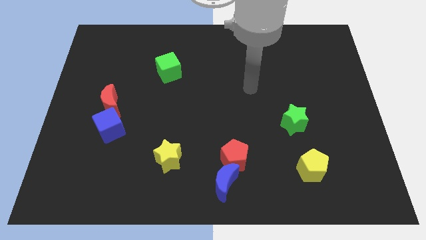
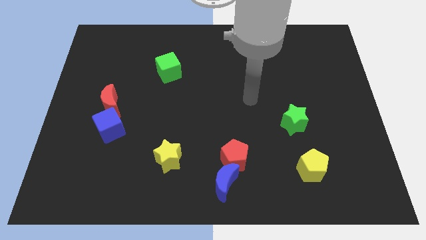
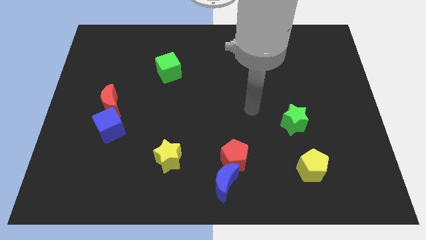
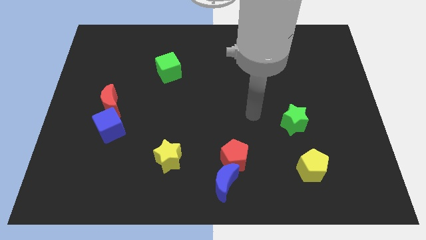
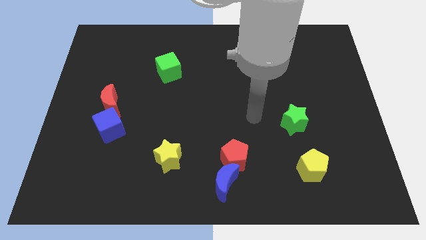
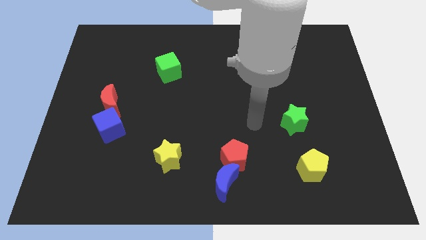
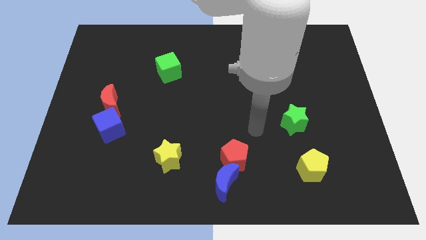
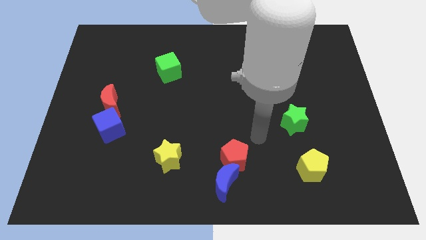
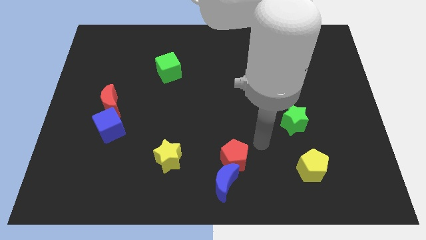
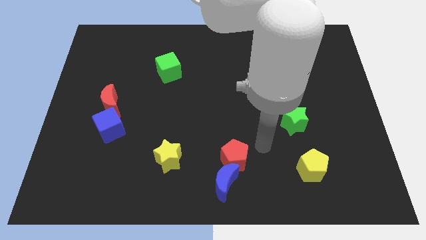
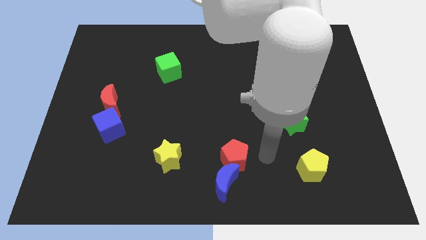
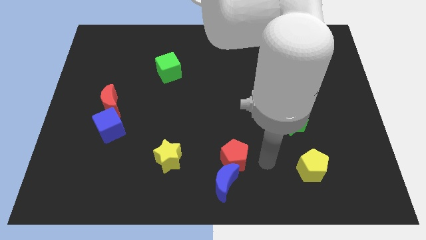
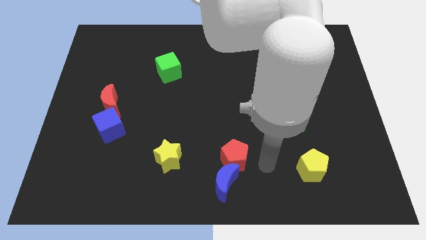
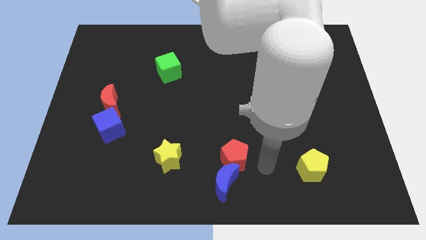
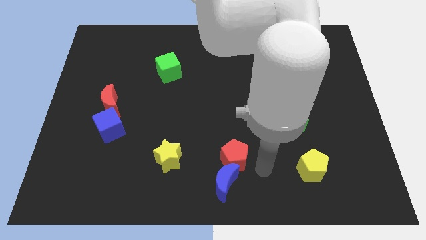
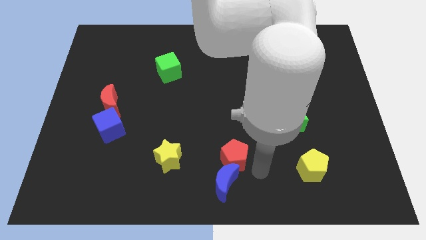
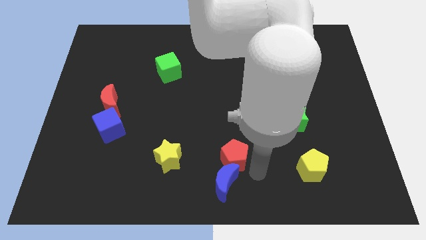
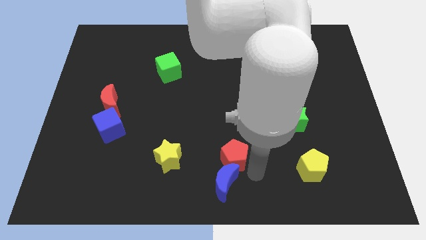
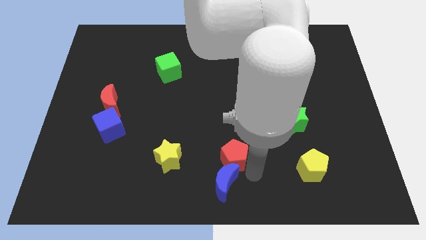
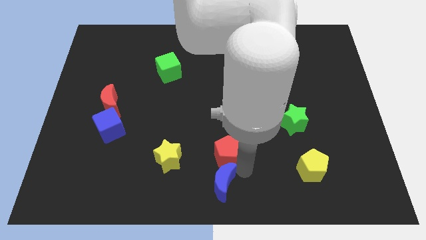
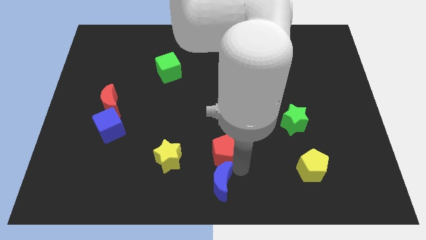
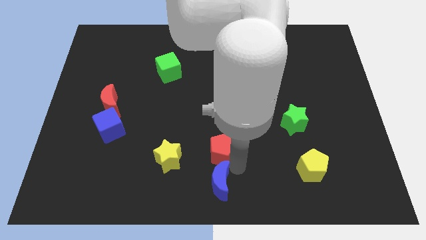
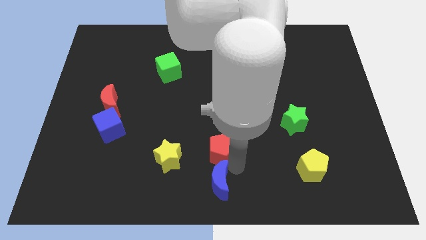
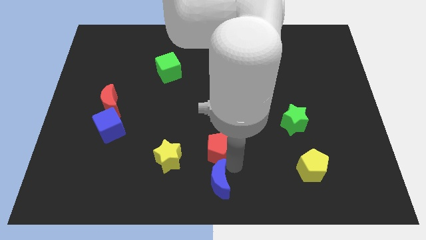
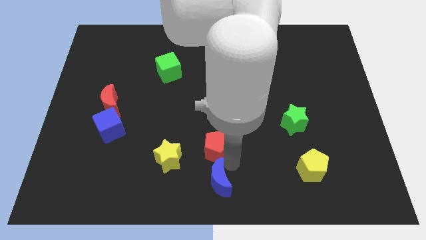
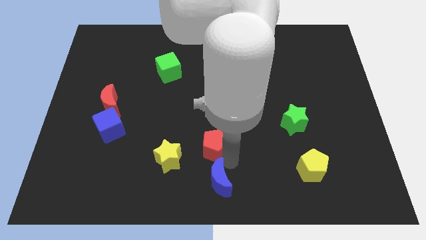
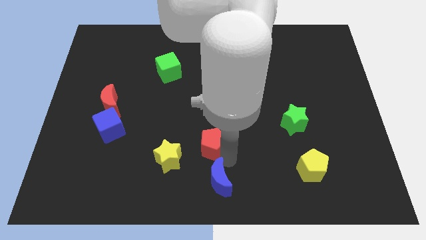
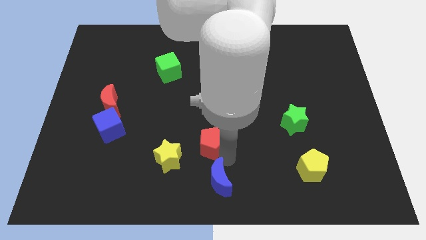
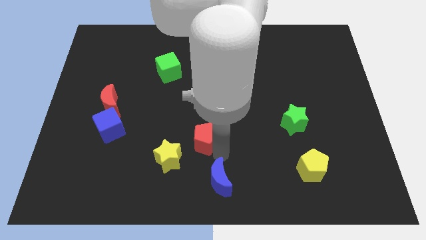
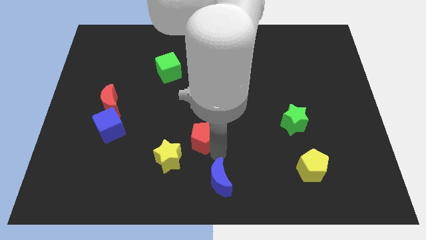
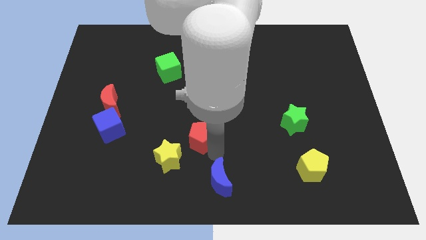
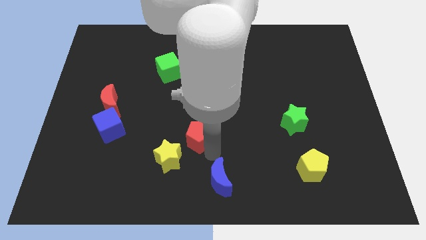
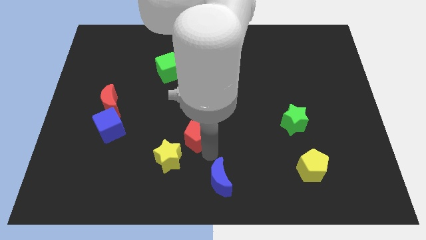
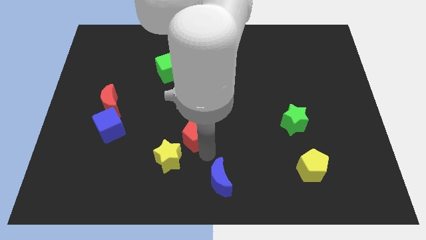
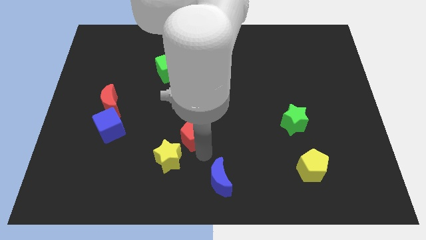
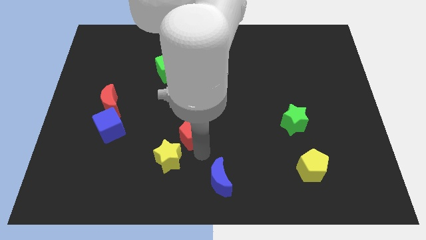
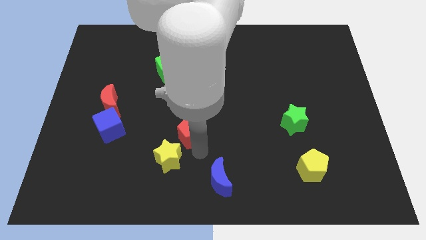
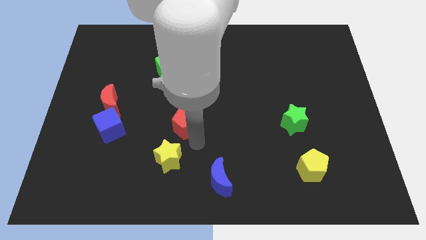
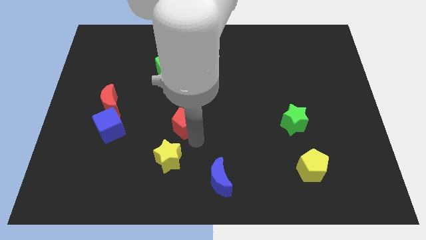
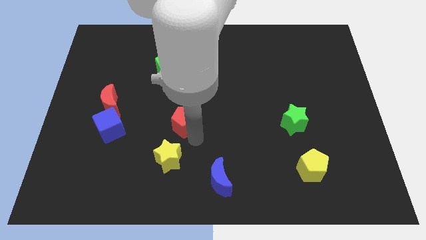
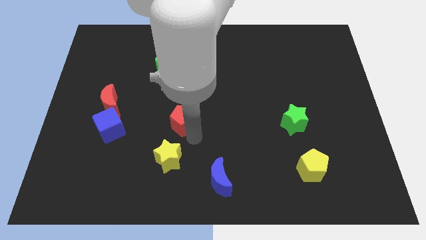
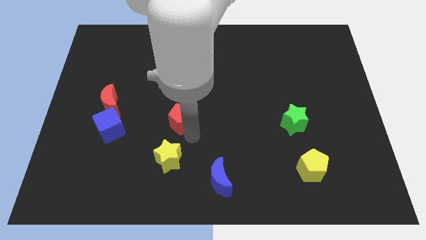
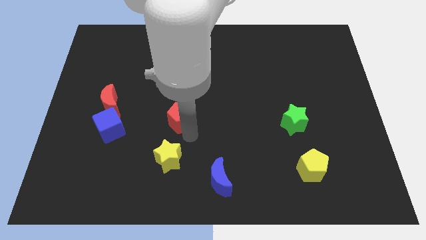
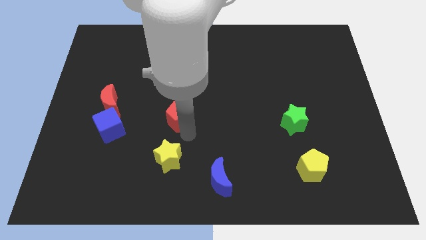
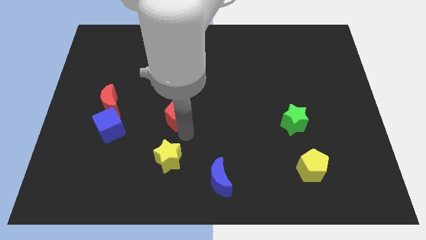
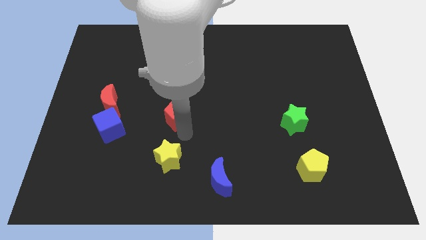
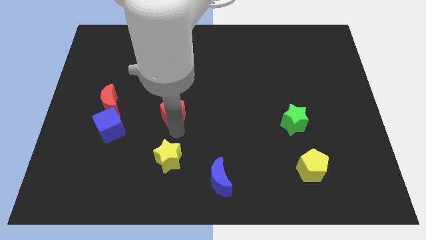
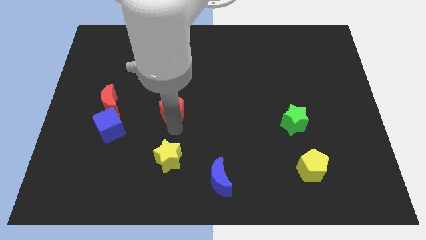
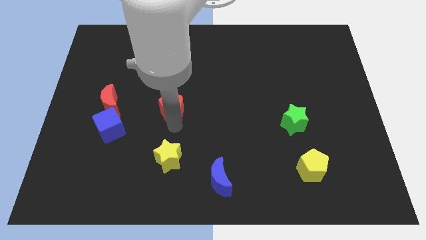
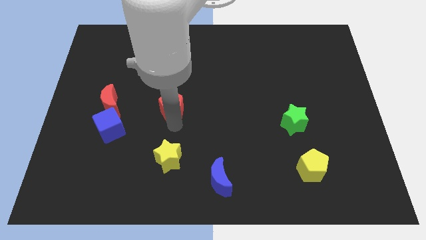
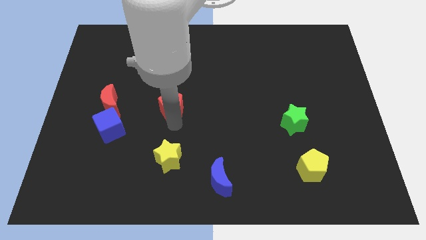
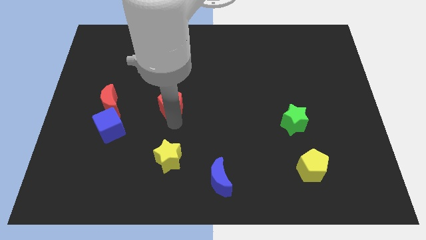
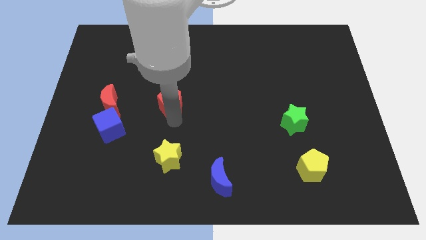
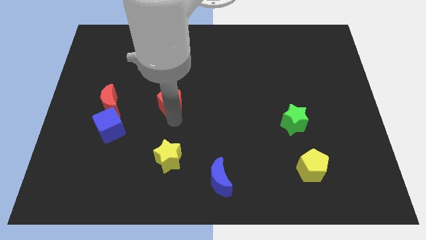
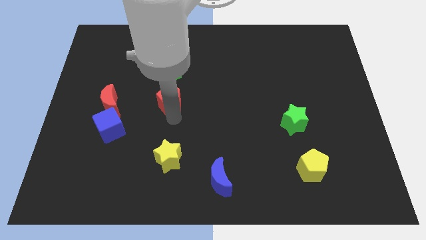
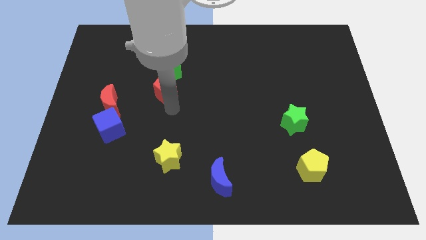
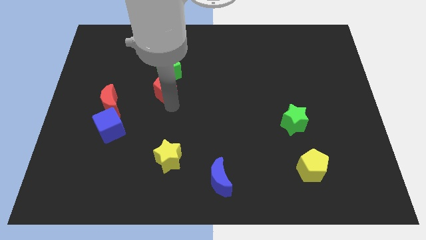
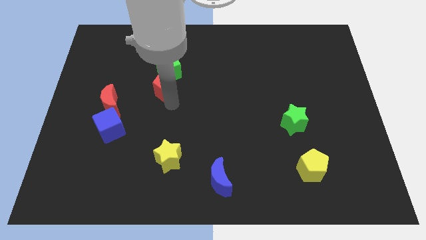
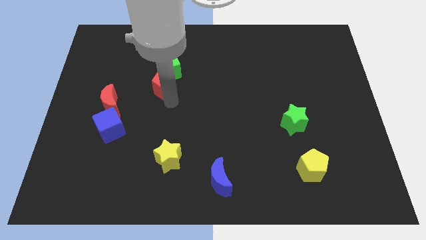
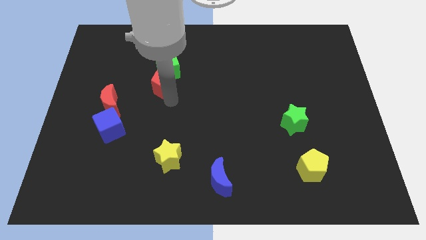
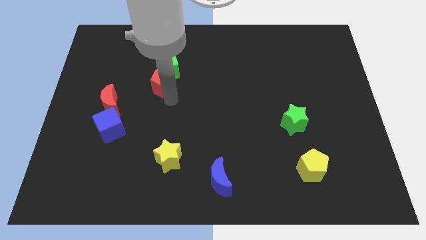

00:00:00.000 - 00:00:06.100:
put the red pentagon towards the green cube

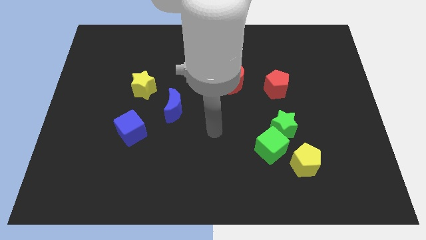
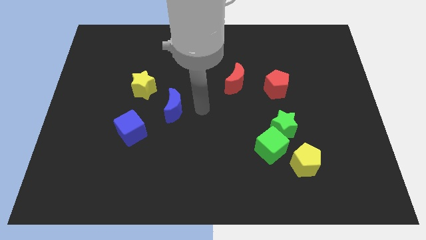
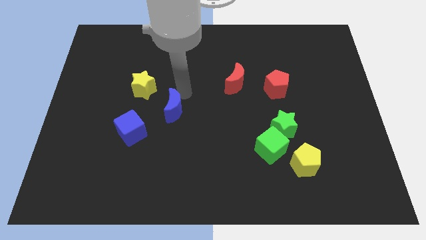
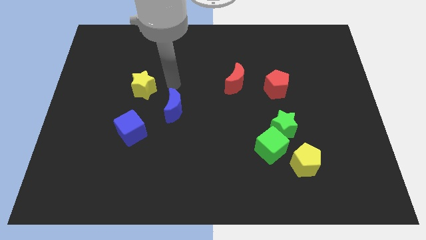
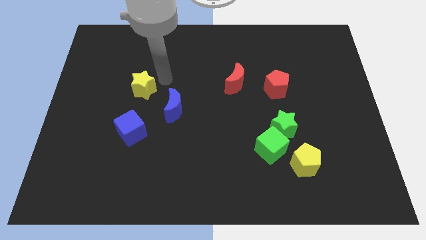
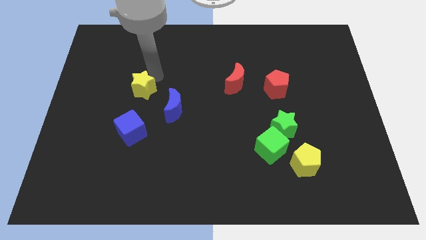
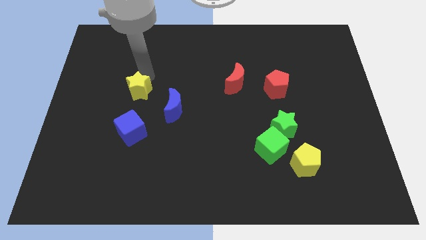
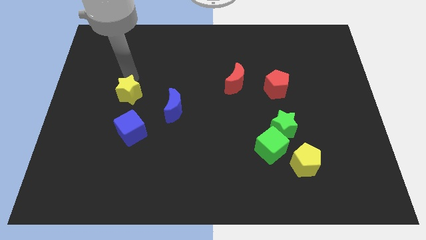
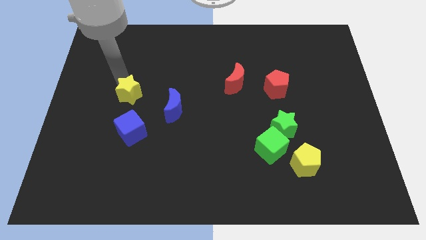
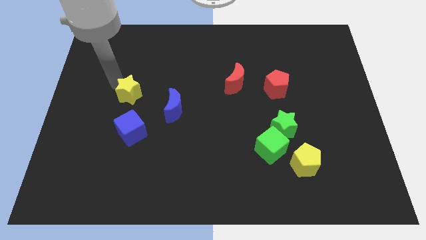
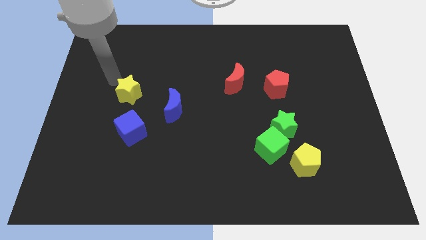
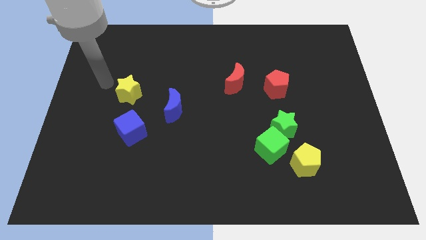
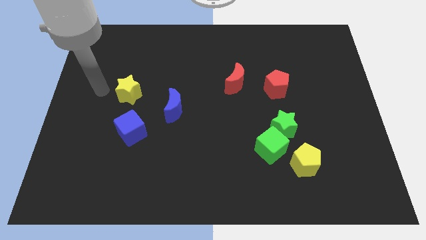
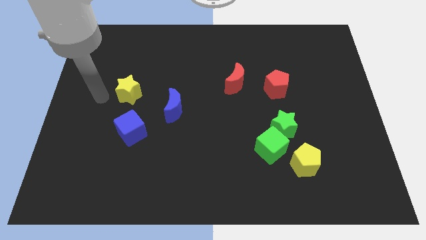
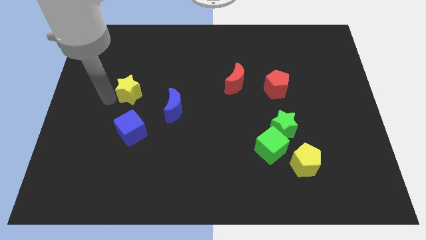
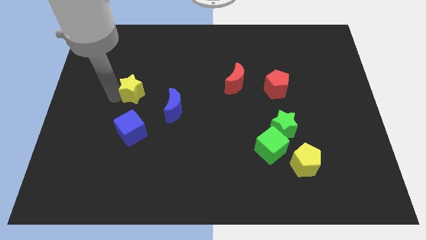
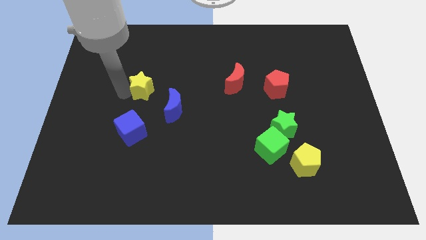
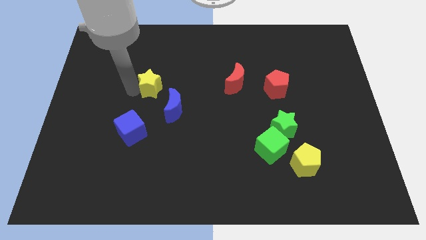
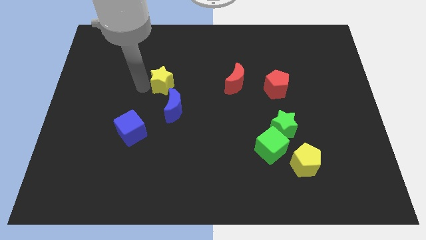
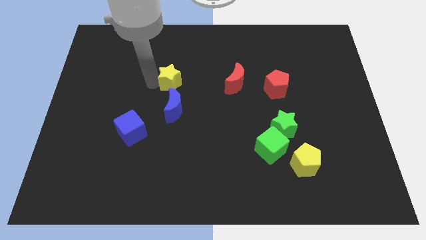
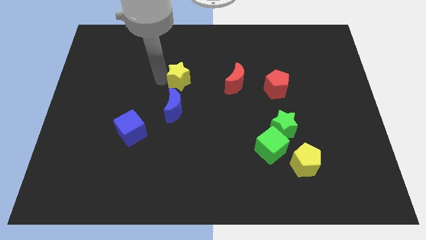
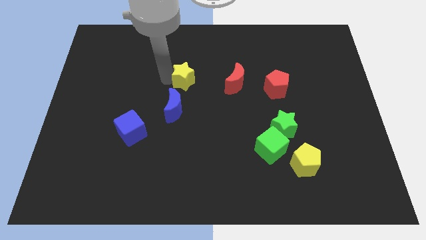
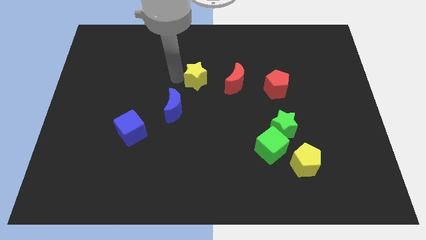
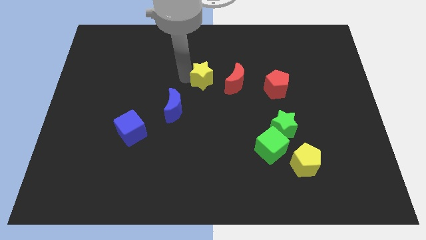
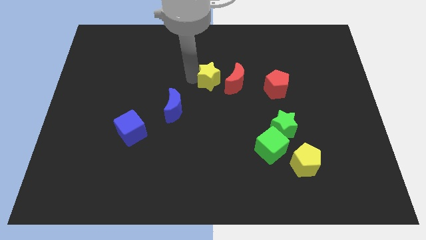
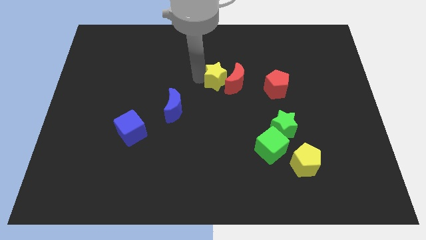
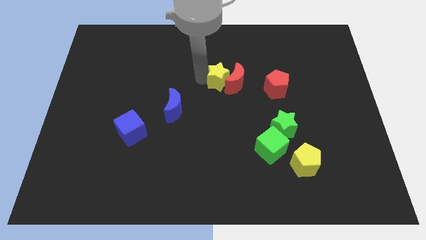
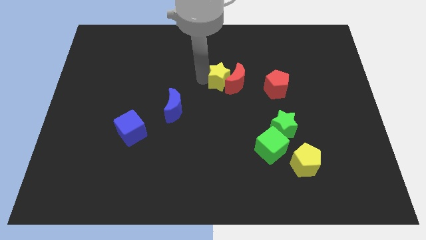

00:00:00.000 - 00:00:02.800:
slide the yellow star towards the red moon
